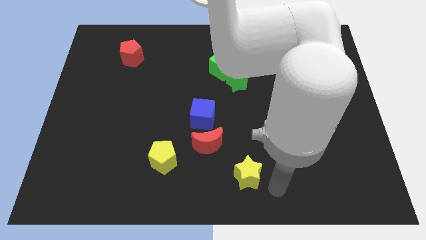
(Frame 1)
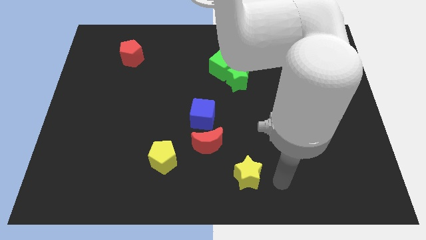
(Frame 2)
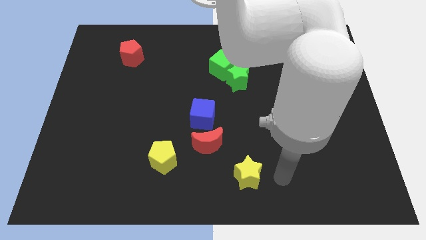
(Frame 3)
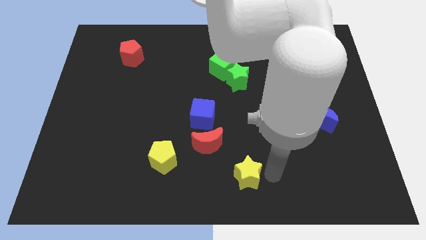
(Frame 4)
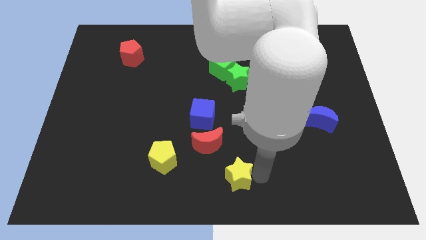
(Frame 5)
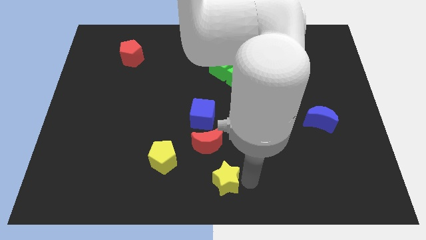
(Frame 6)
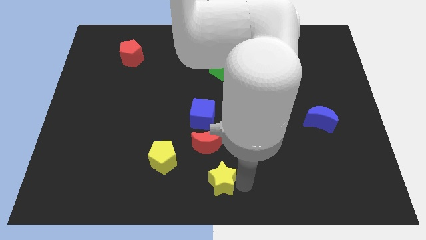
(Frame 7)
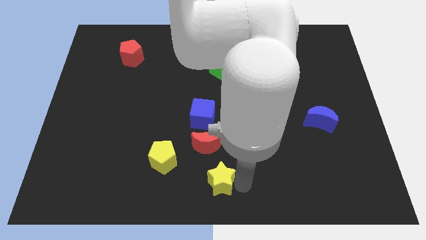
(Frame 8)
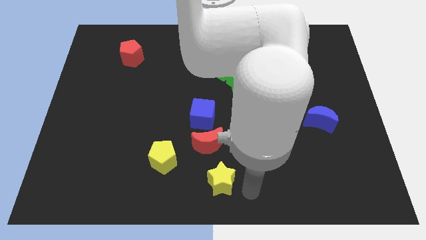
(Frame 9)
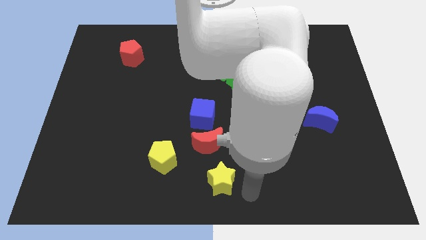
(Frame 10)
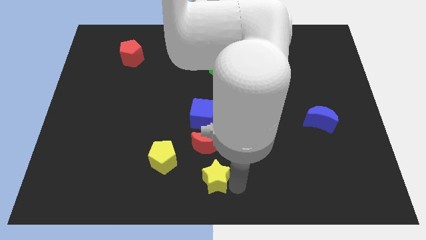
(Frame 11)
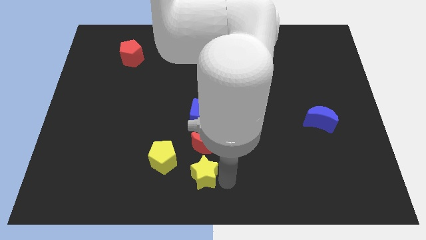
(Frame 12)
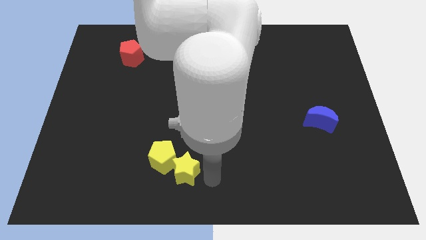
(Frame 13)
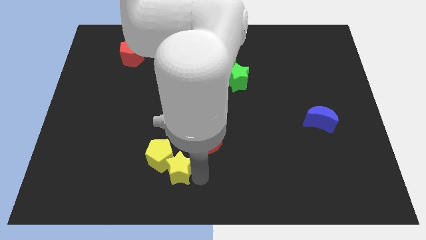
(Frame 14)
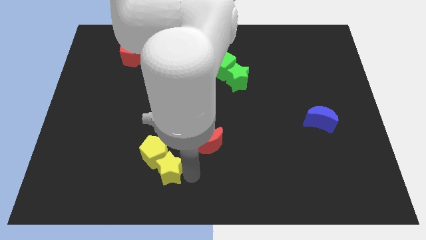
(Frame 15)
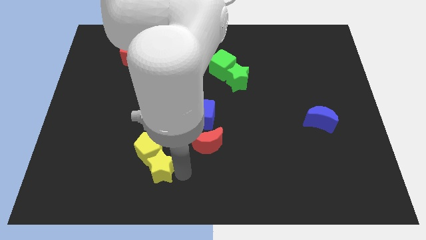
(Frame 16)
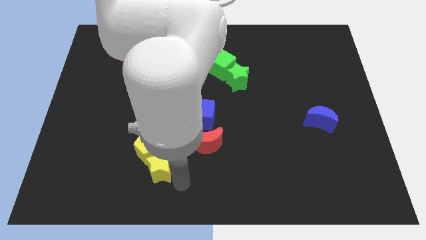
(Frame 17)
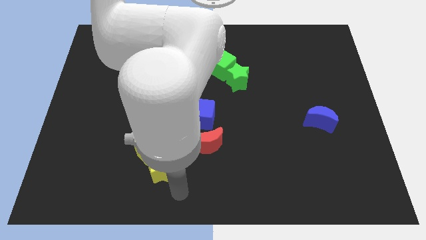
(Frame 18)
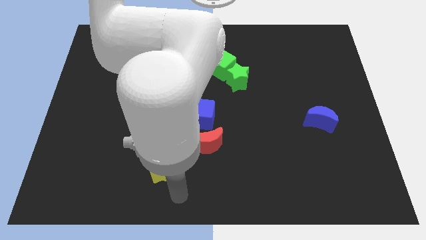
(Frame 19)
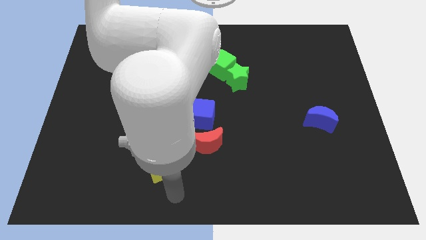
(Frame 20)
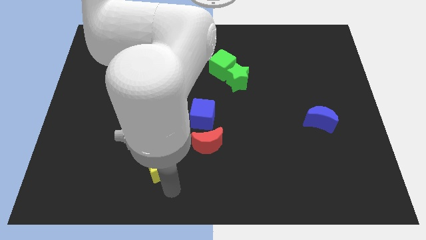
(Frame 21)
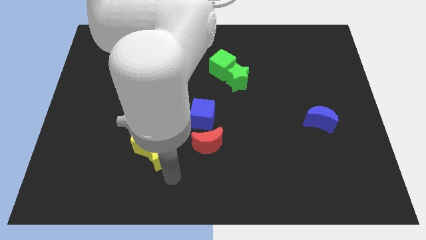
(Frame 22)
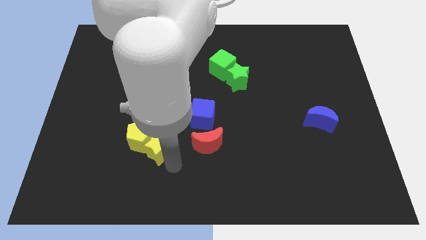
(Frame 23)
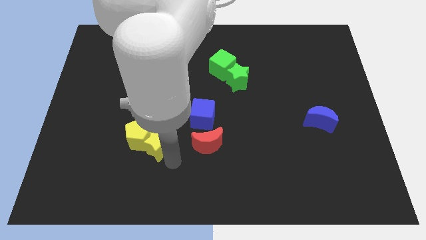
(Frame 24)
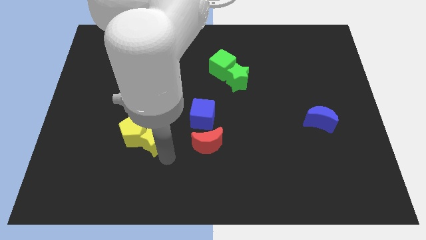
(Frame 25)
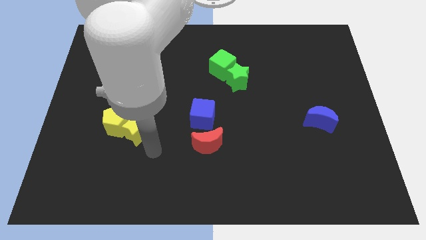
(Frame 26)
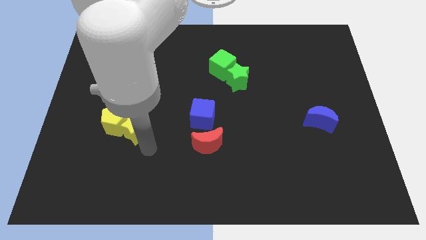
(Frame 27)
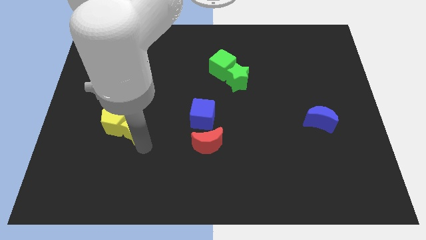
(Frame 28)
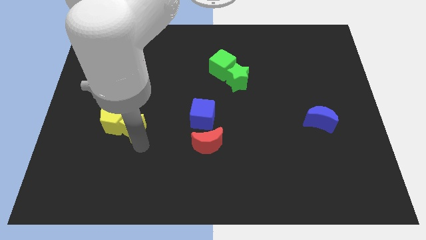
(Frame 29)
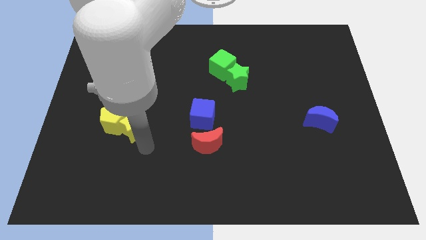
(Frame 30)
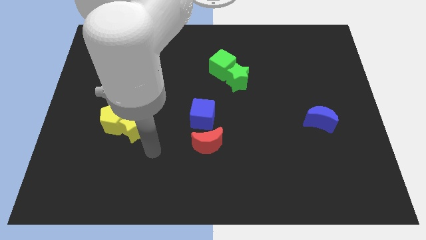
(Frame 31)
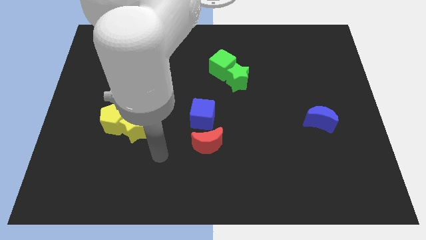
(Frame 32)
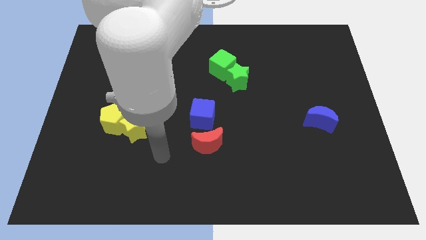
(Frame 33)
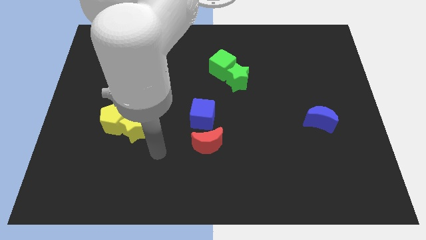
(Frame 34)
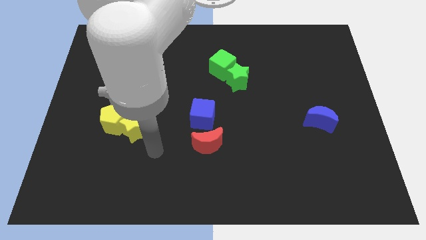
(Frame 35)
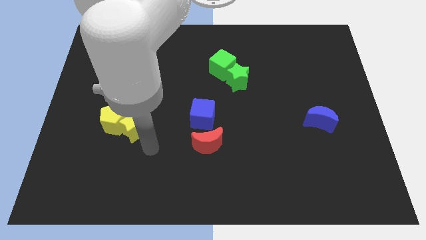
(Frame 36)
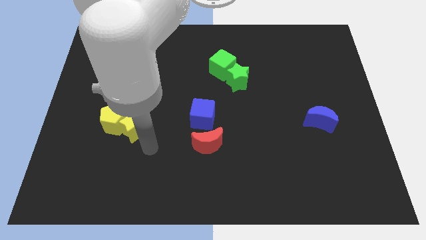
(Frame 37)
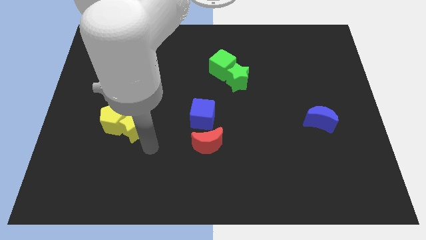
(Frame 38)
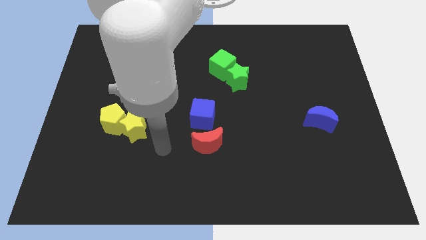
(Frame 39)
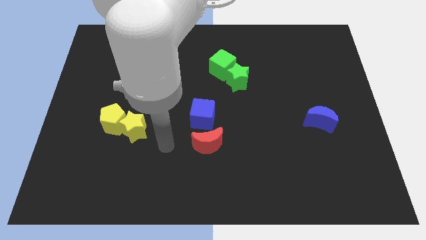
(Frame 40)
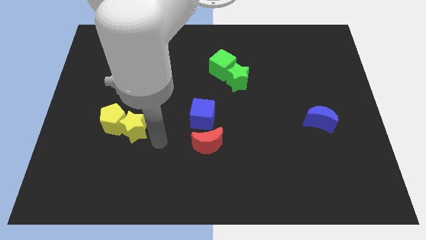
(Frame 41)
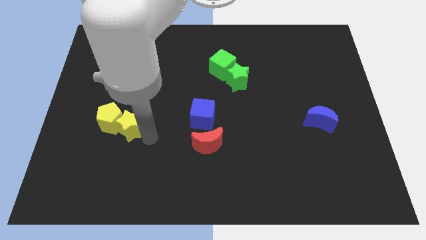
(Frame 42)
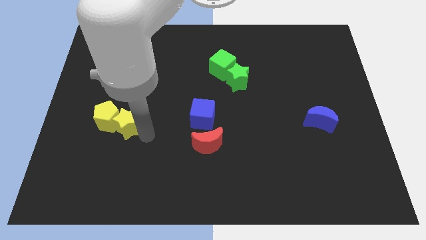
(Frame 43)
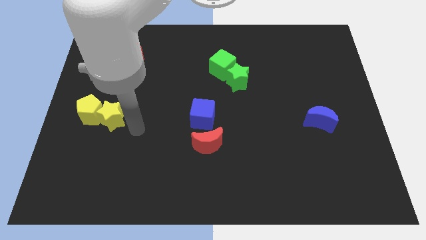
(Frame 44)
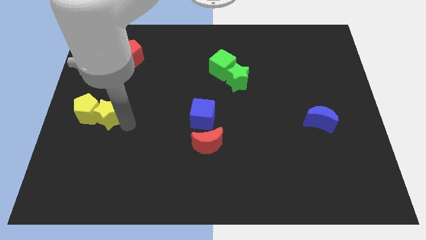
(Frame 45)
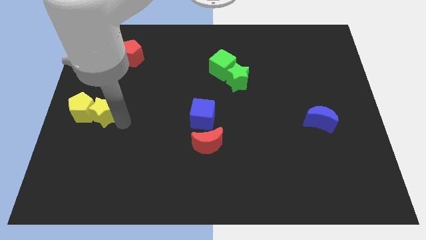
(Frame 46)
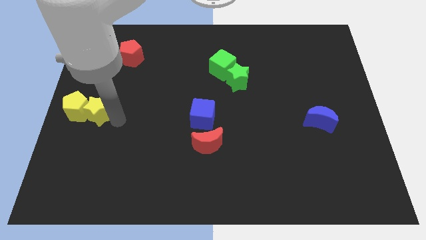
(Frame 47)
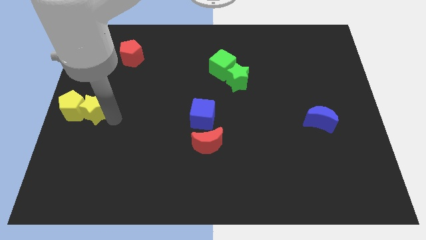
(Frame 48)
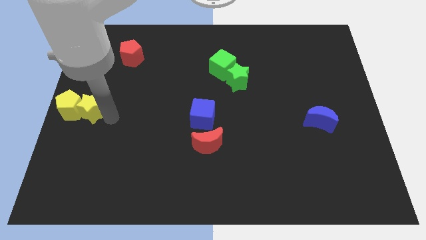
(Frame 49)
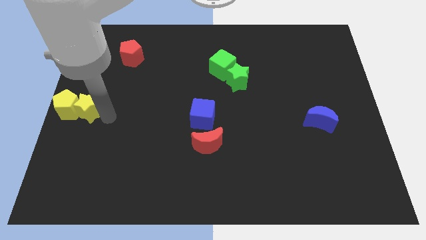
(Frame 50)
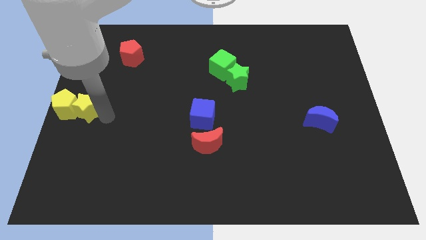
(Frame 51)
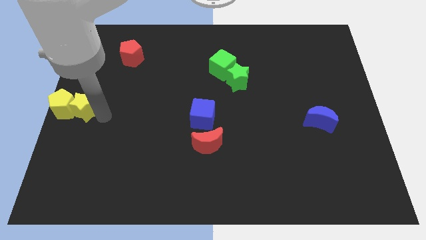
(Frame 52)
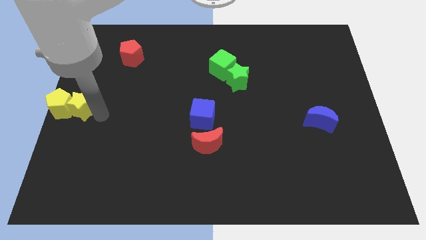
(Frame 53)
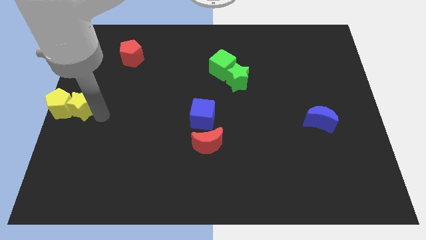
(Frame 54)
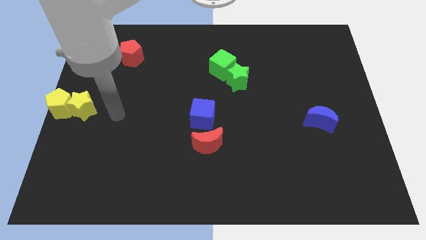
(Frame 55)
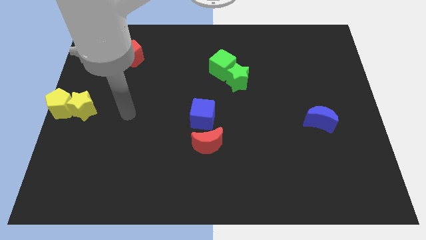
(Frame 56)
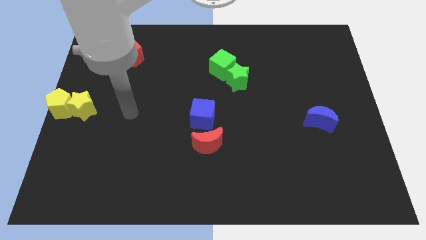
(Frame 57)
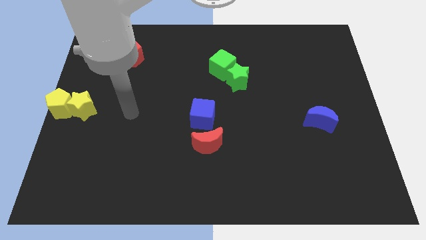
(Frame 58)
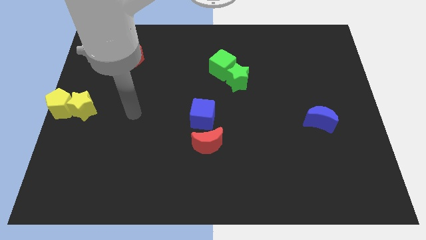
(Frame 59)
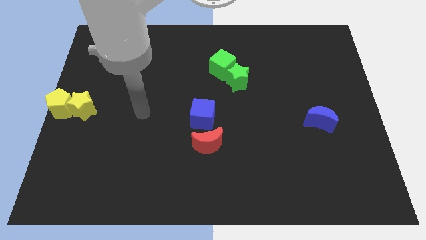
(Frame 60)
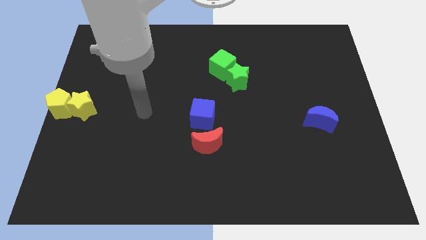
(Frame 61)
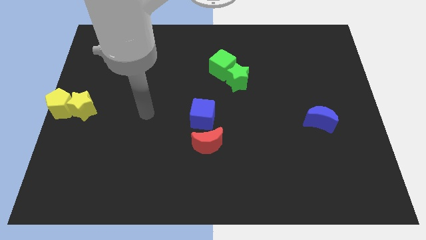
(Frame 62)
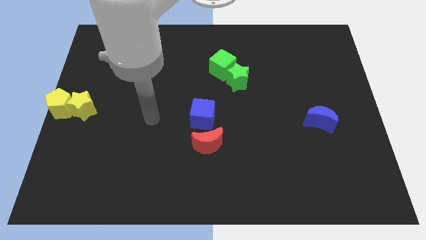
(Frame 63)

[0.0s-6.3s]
push the yellow star along with the yellow pentagon to left center of the board

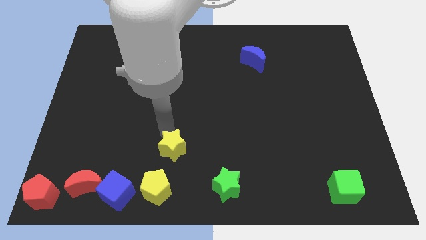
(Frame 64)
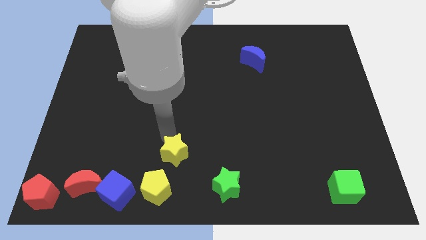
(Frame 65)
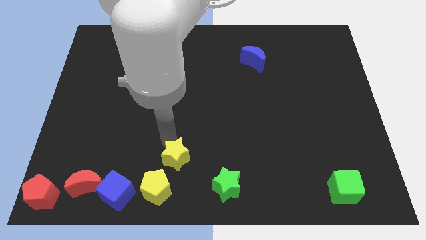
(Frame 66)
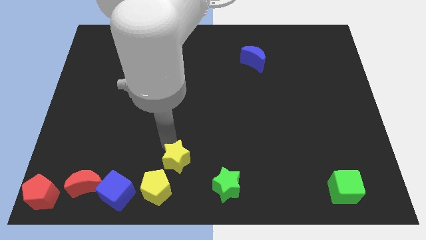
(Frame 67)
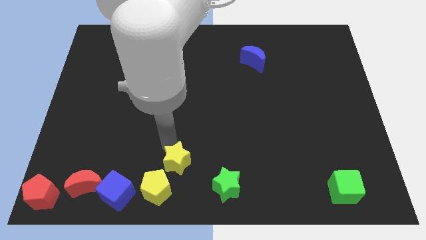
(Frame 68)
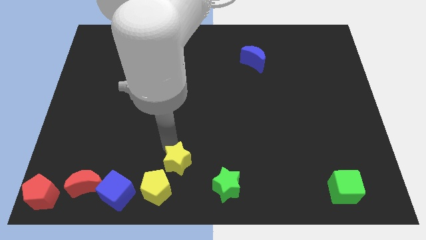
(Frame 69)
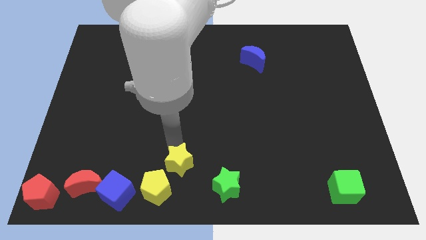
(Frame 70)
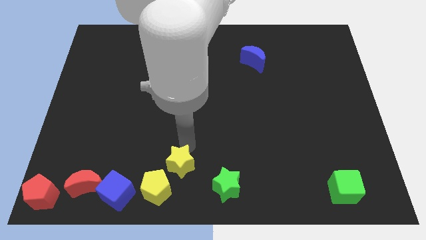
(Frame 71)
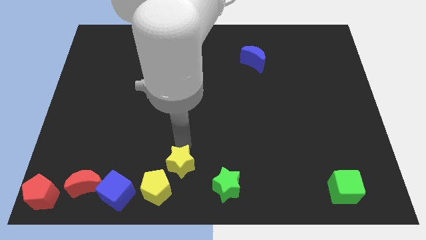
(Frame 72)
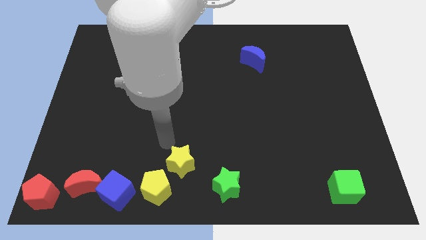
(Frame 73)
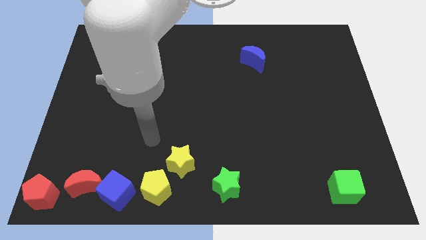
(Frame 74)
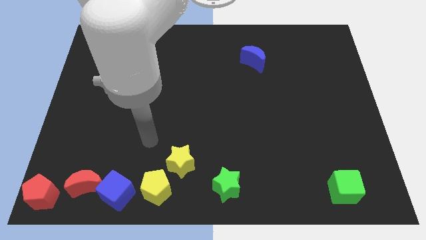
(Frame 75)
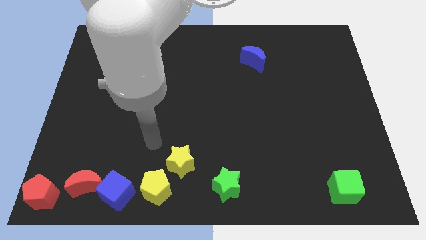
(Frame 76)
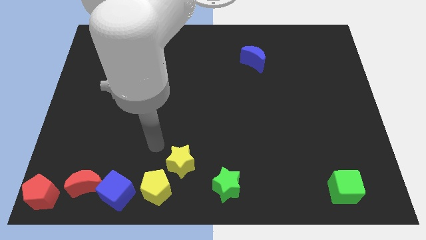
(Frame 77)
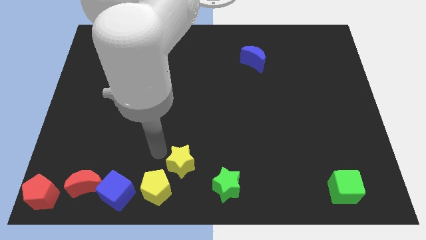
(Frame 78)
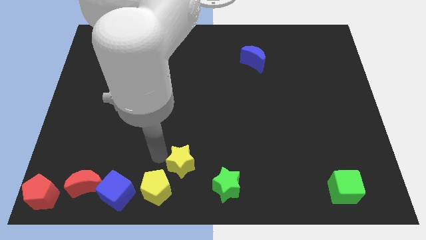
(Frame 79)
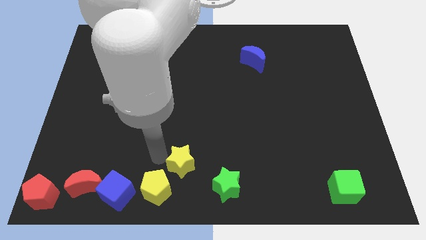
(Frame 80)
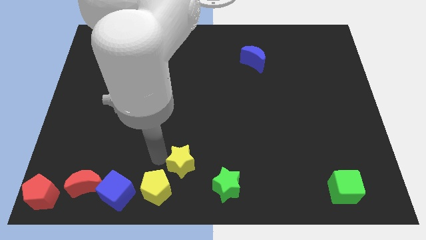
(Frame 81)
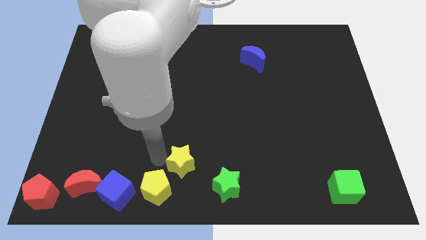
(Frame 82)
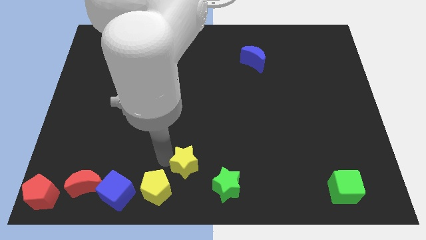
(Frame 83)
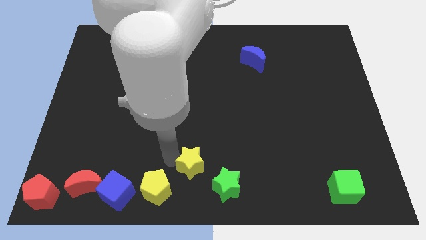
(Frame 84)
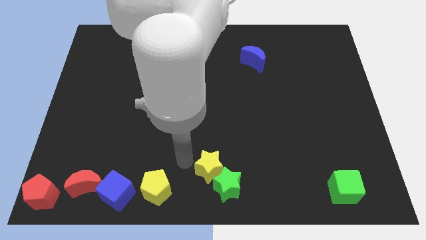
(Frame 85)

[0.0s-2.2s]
place yellow star at the top left side of green star

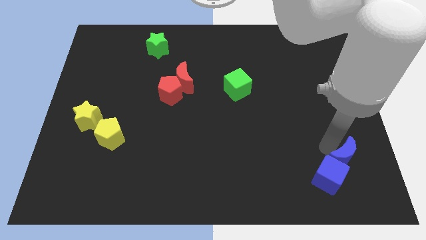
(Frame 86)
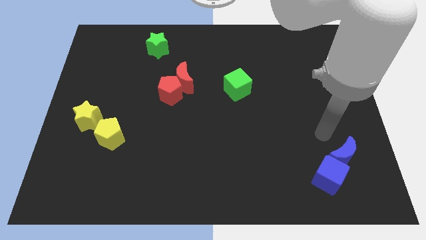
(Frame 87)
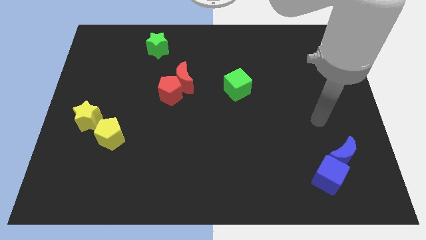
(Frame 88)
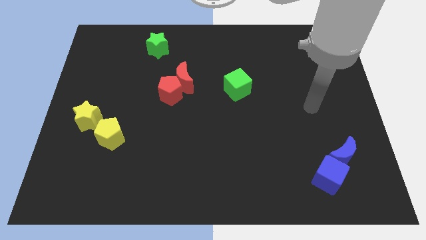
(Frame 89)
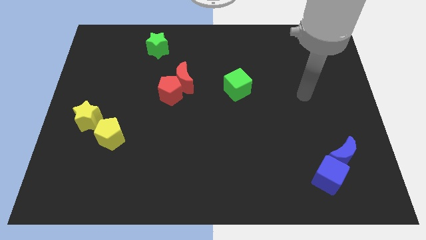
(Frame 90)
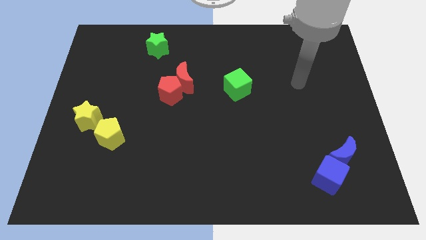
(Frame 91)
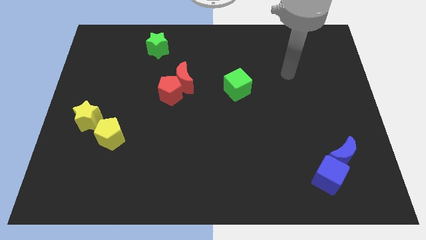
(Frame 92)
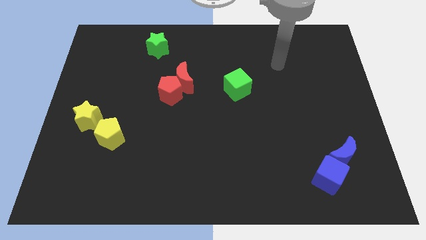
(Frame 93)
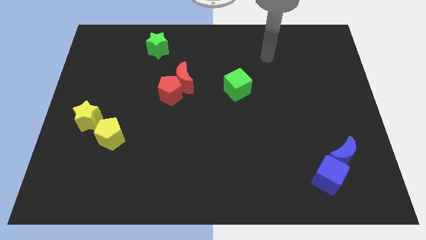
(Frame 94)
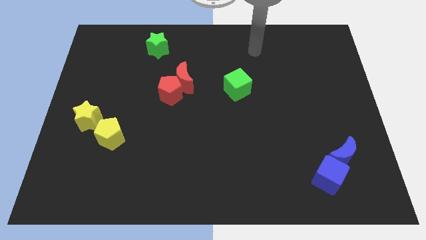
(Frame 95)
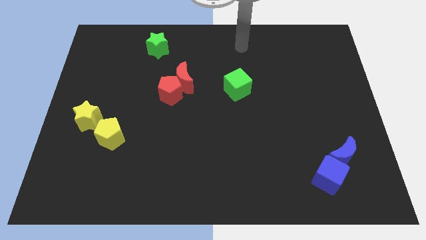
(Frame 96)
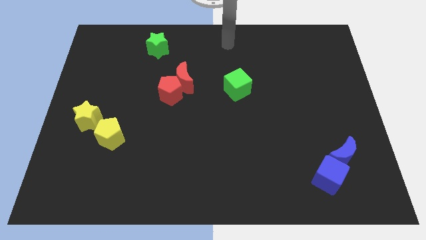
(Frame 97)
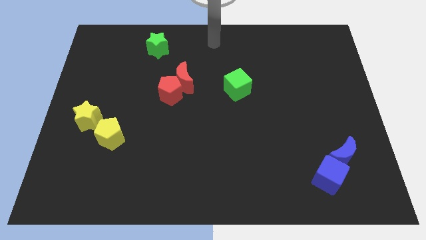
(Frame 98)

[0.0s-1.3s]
move your arm away from the blue blocks
